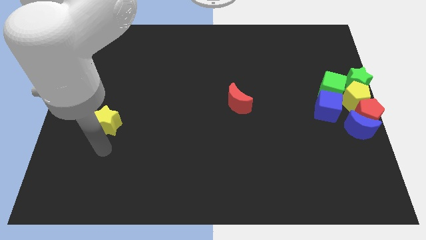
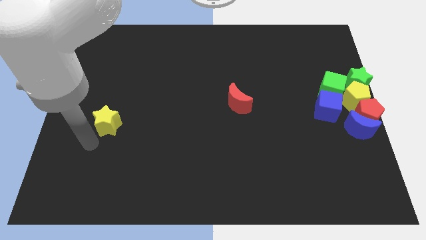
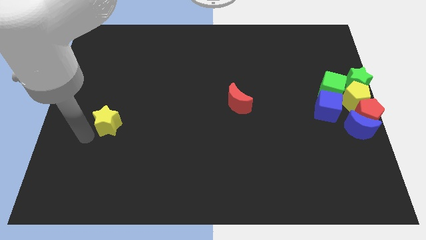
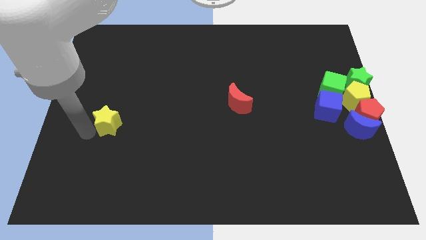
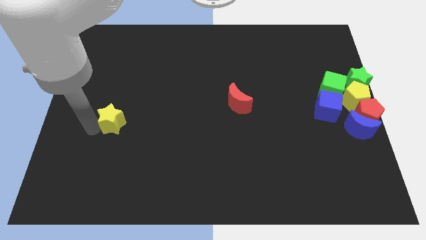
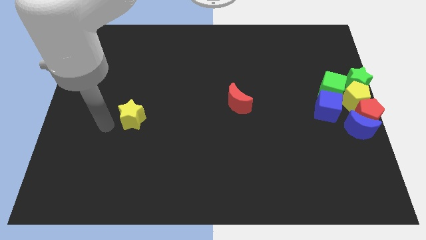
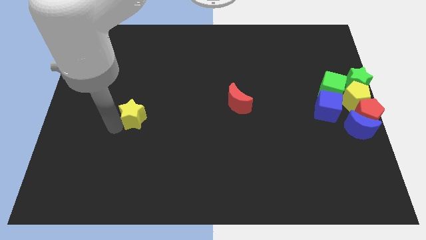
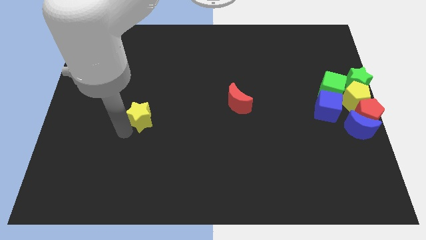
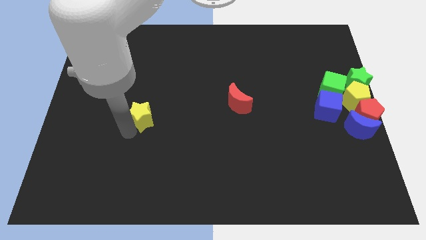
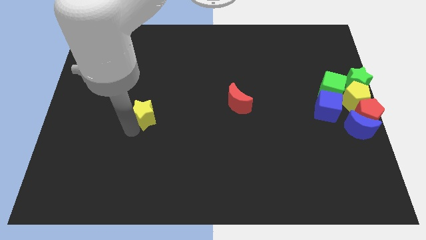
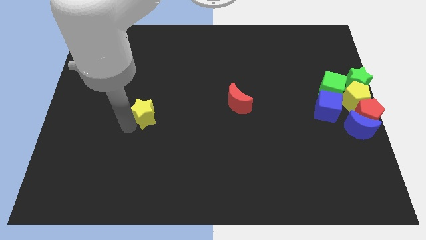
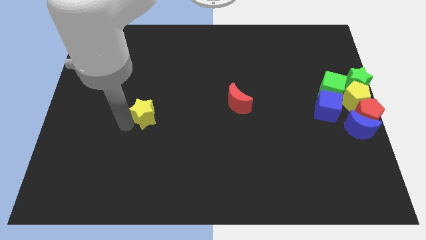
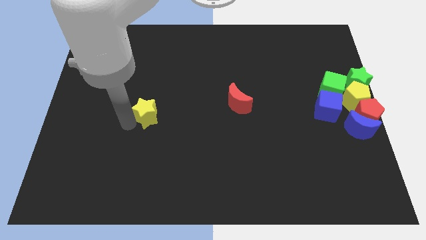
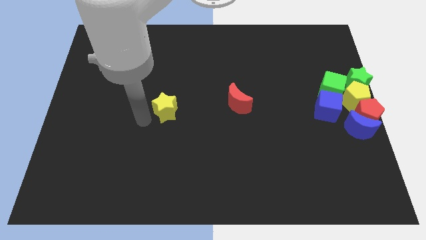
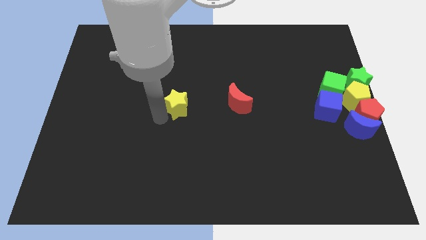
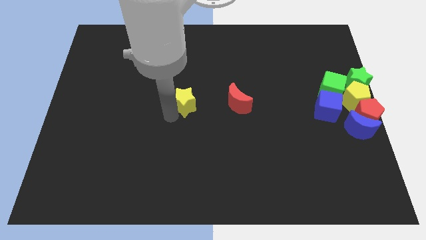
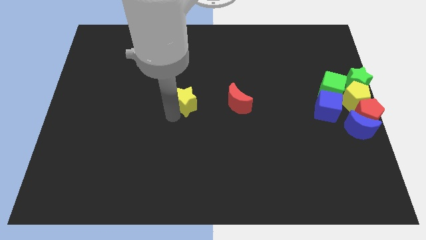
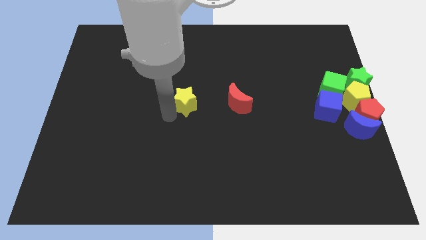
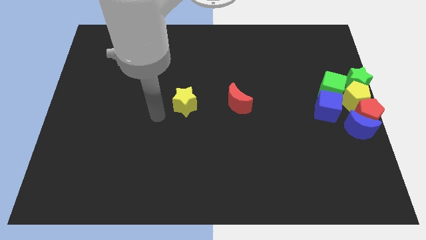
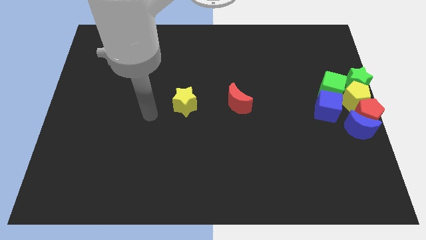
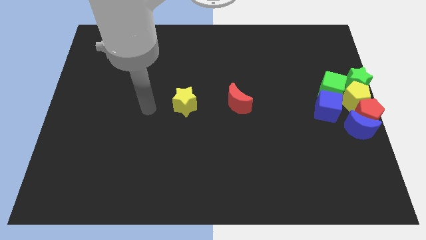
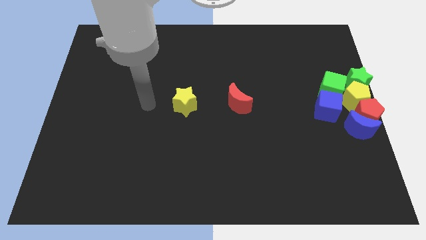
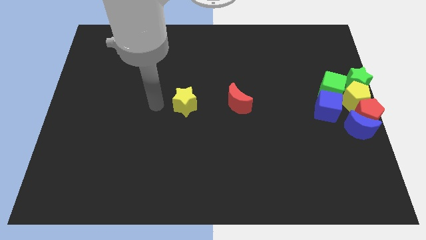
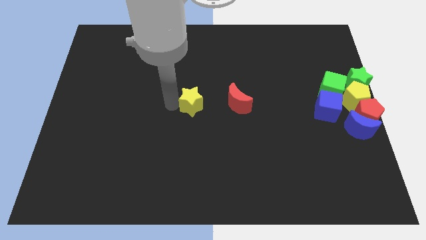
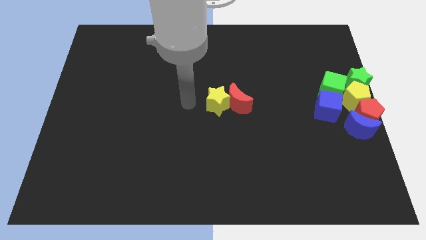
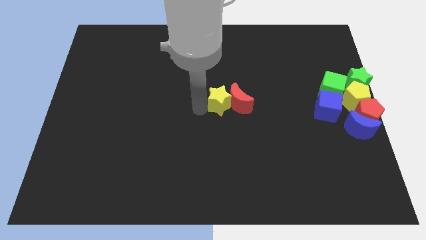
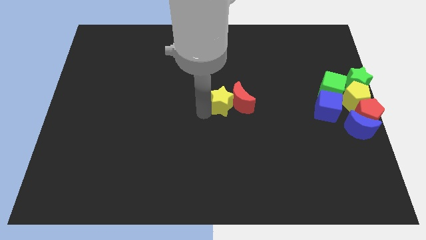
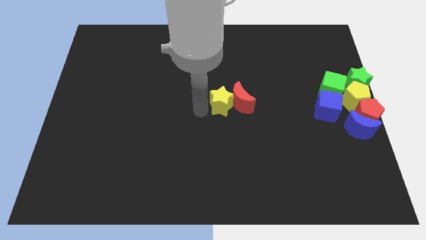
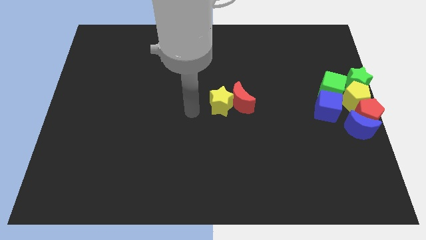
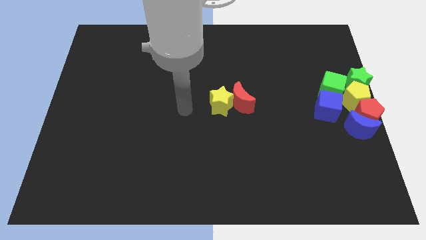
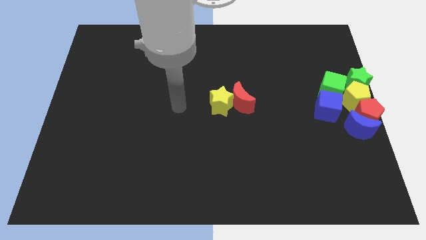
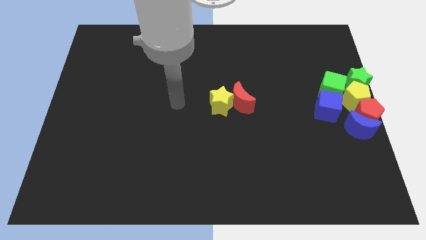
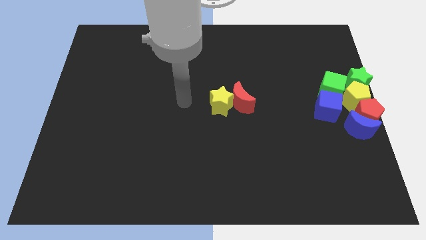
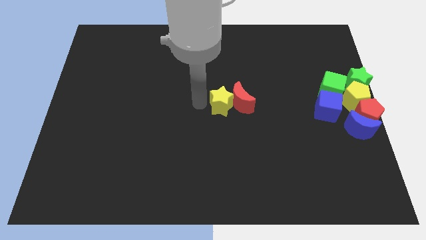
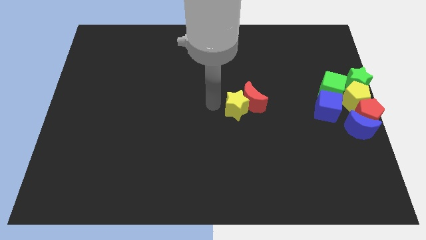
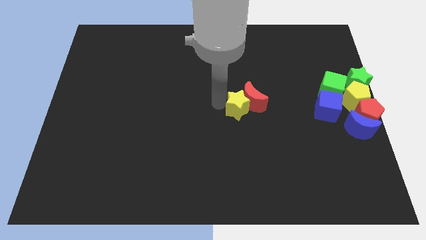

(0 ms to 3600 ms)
move the yellow star into the red crescent

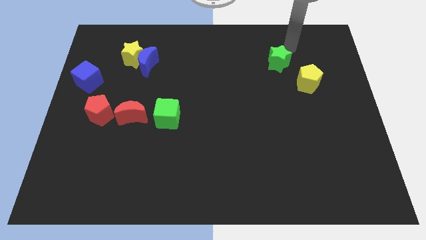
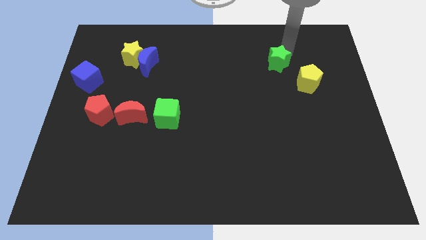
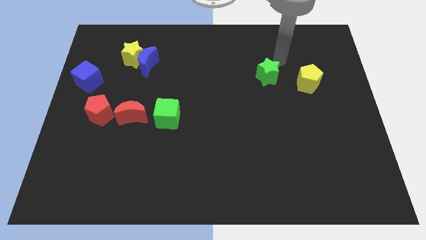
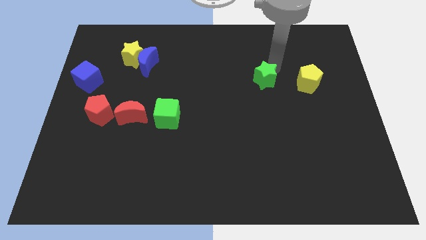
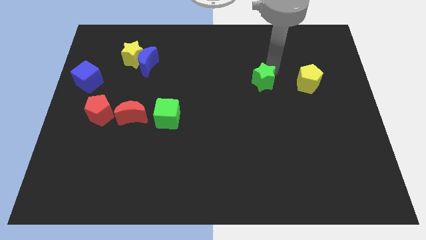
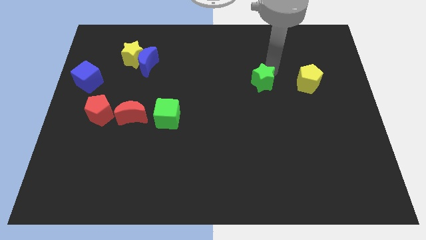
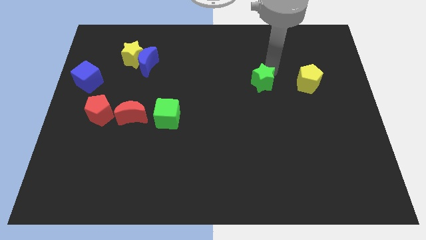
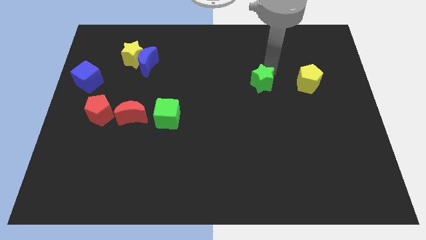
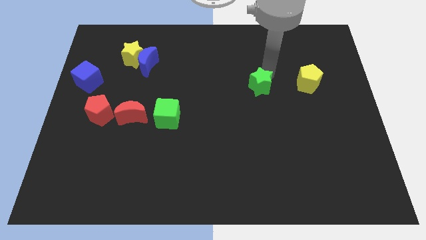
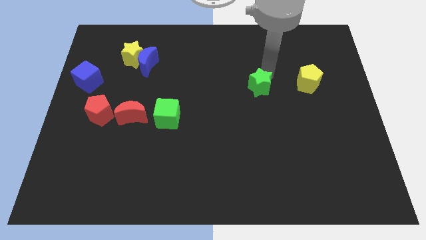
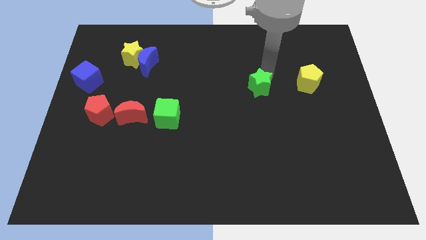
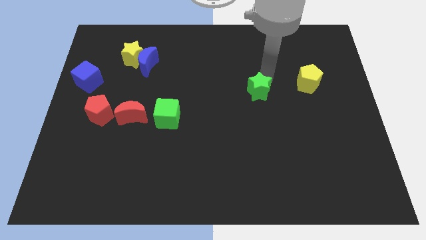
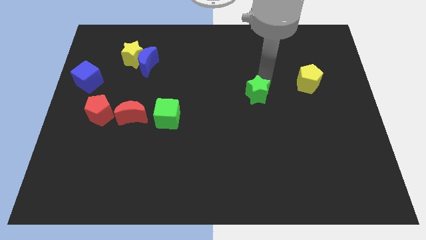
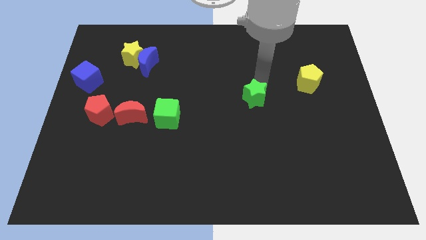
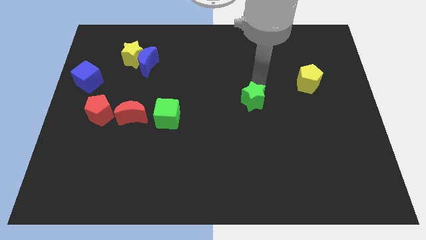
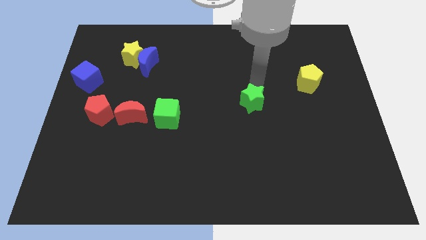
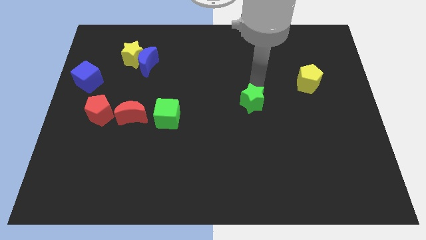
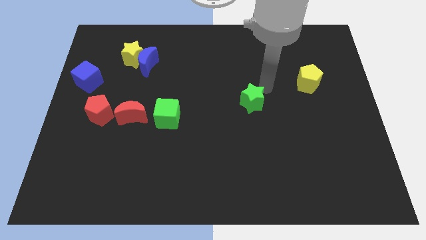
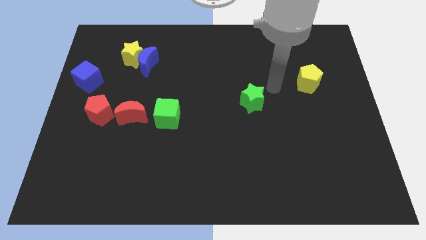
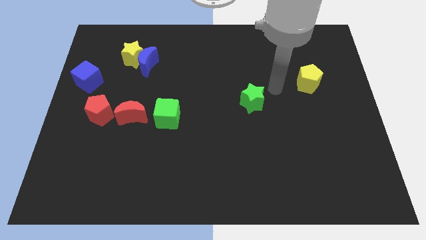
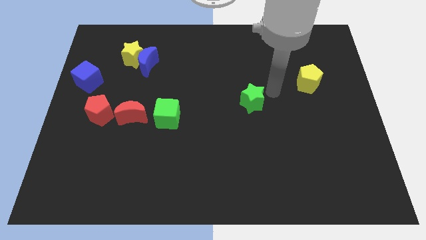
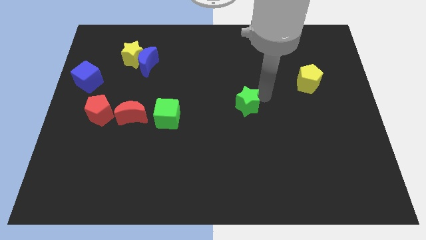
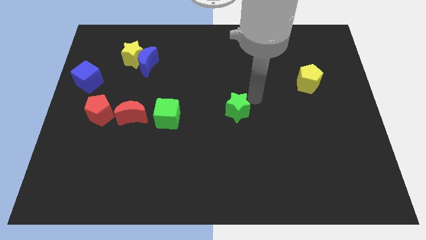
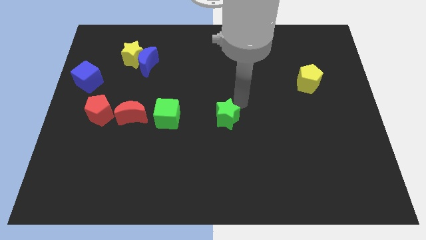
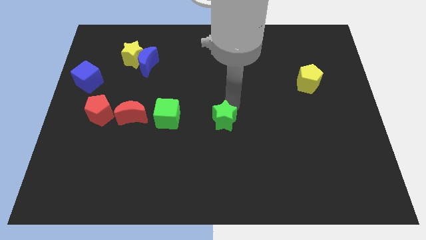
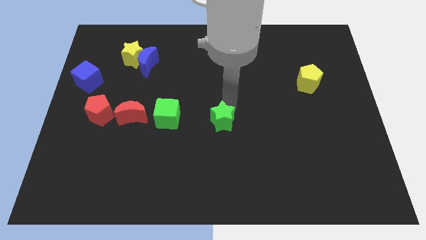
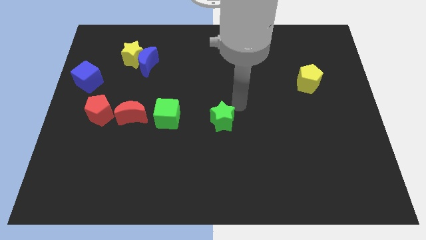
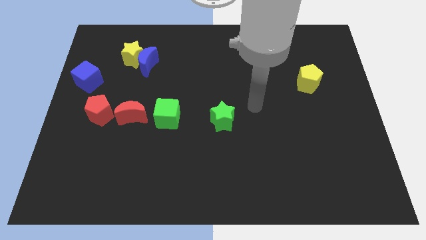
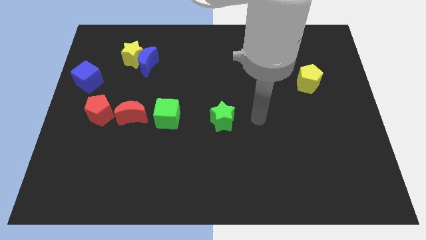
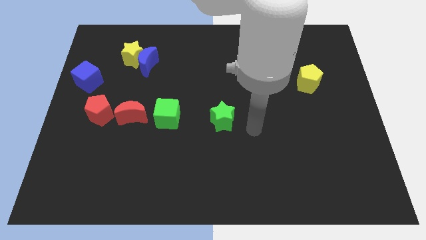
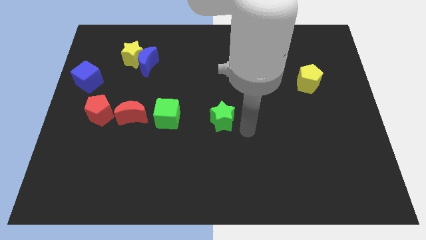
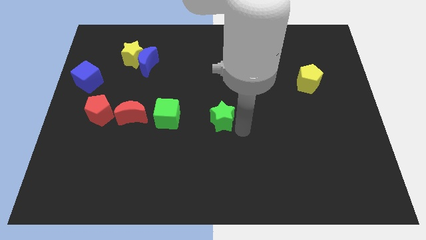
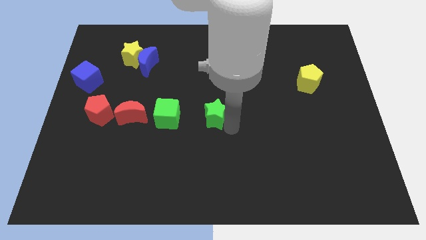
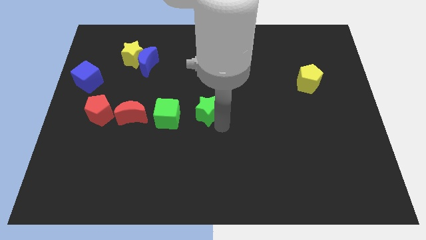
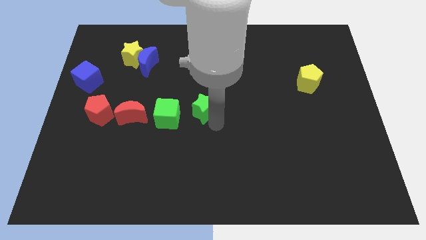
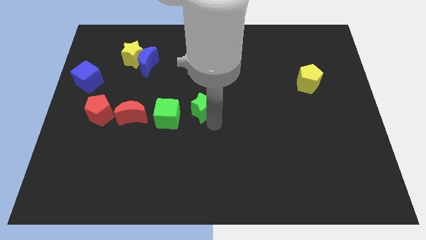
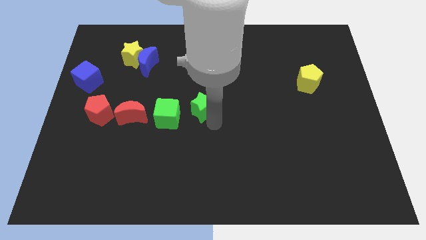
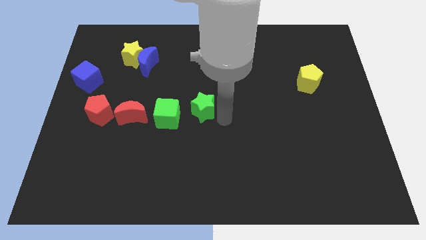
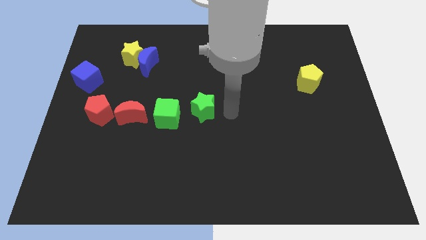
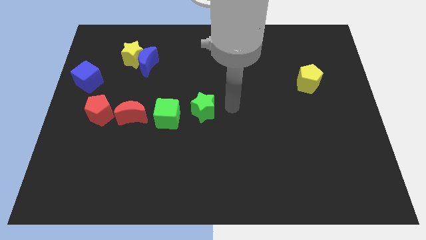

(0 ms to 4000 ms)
place the green star to the right side of the green cube

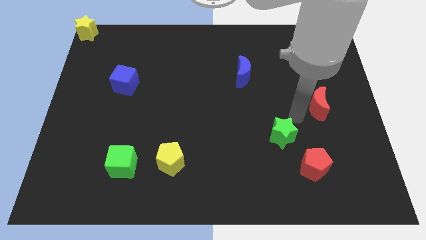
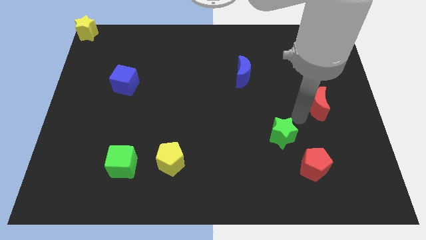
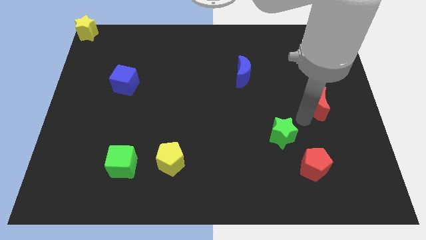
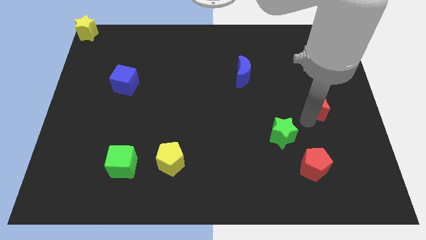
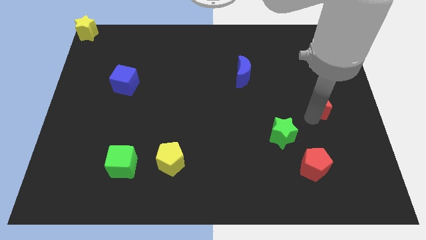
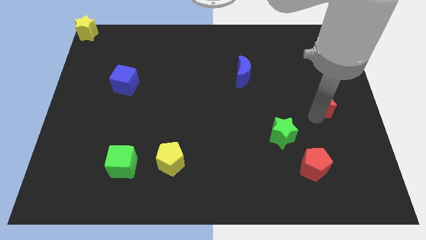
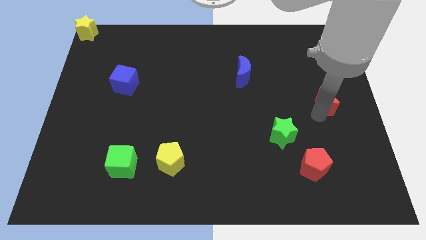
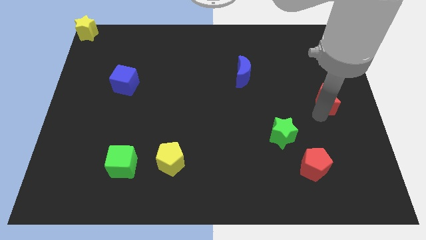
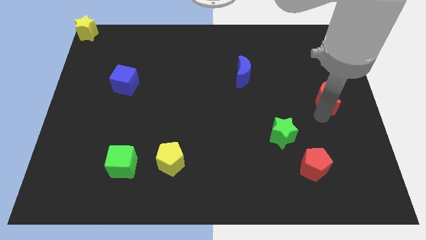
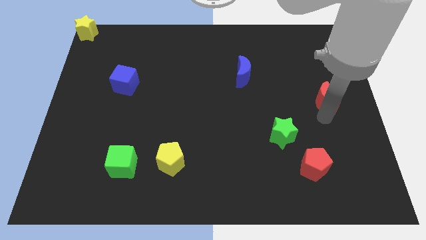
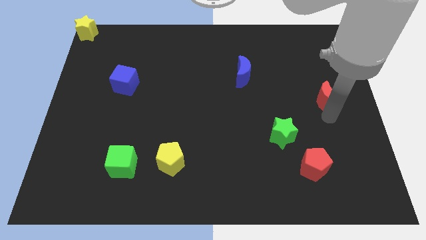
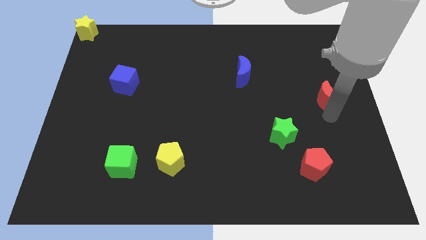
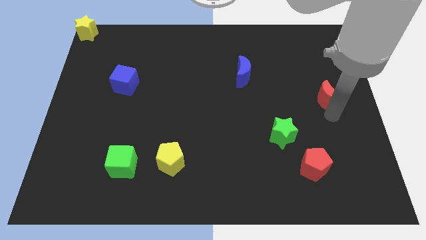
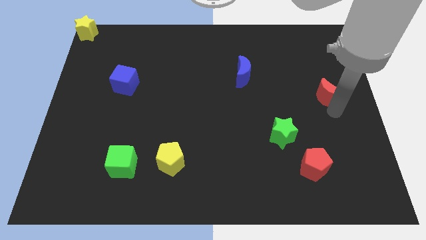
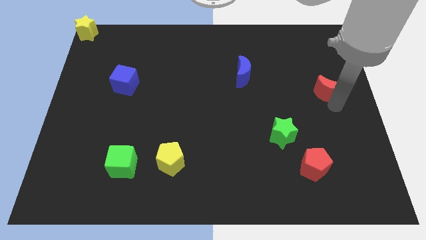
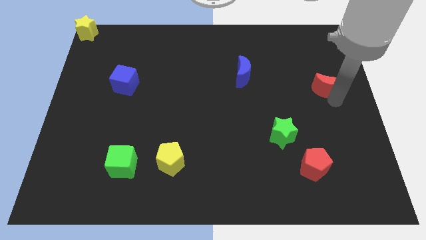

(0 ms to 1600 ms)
slightly move the red crescent towards the right center
